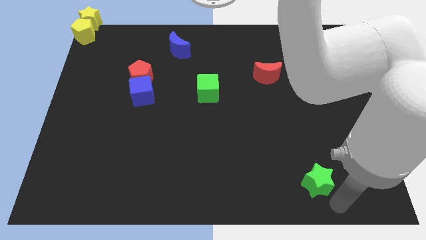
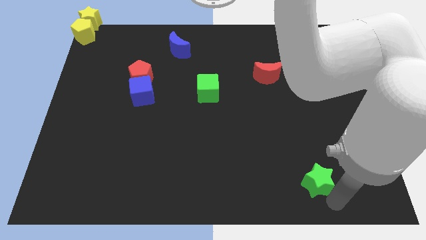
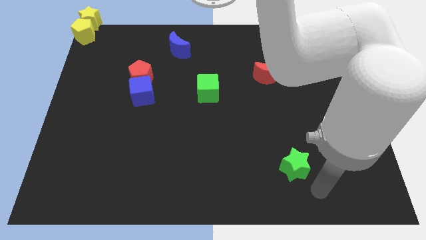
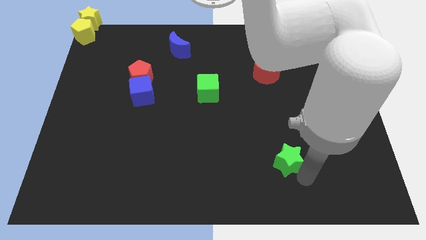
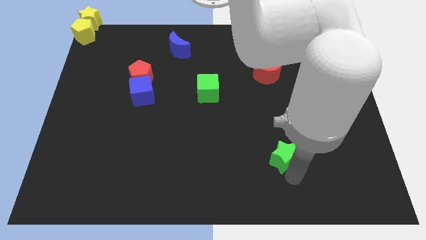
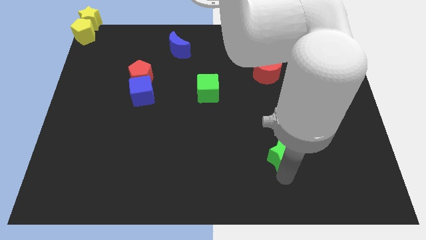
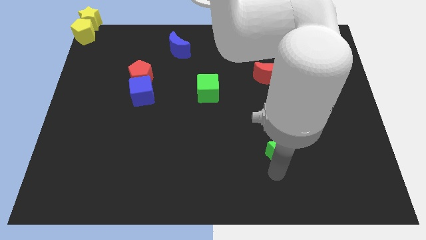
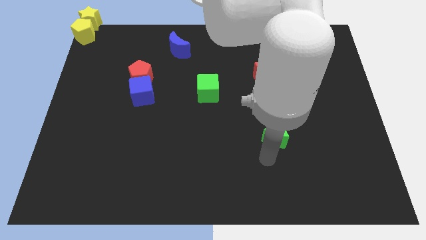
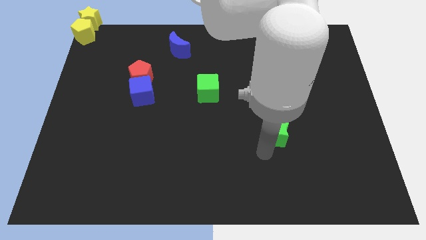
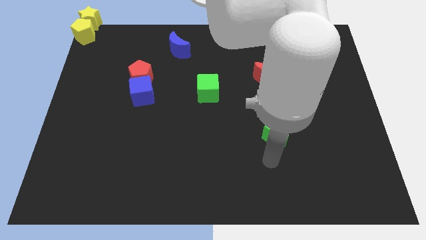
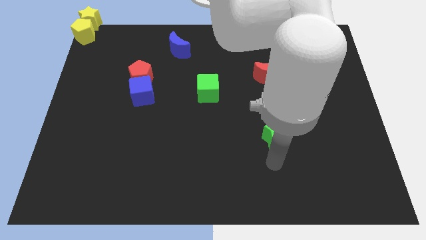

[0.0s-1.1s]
move the green star to the parallel to the bottom of the red crescent

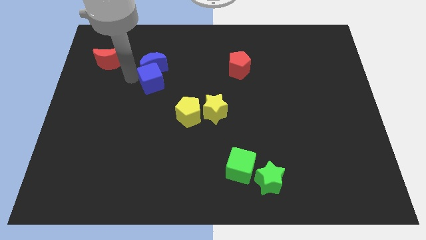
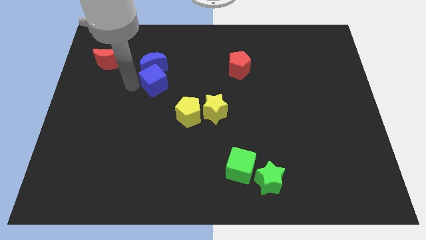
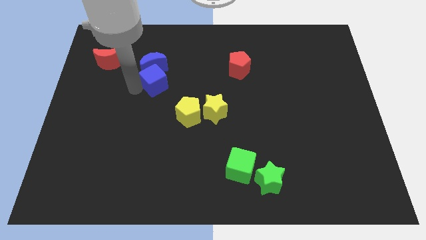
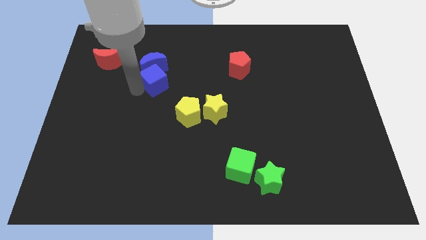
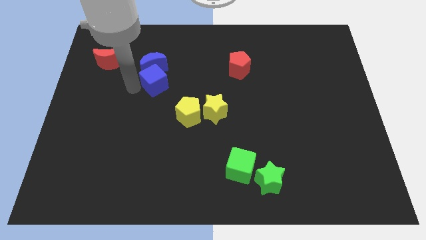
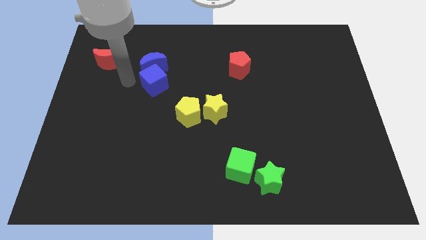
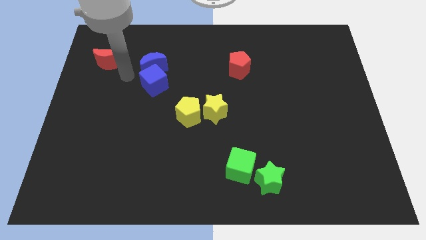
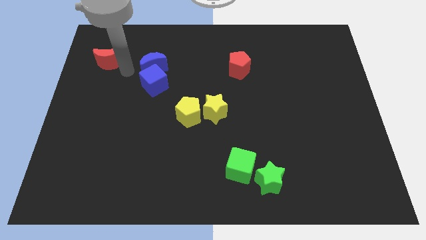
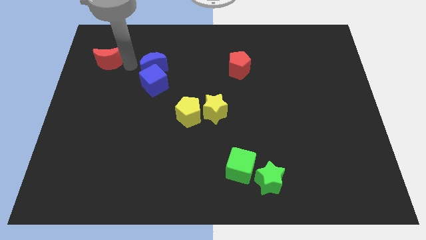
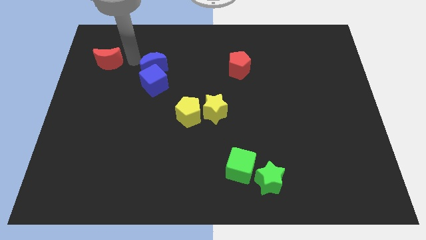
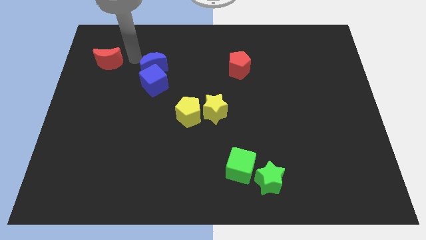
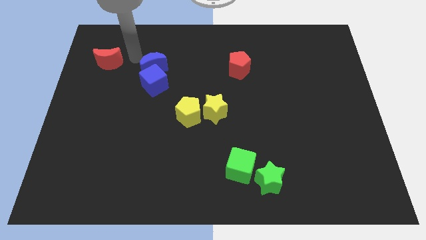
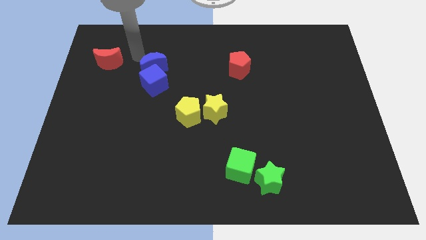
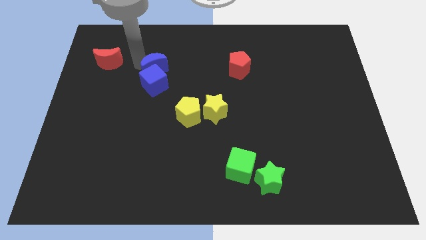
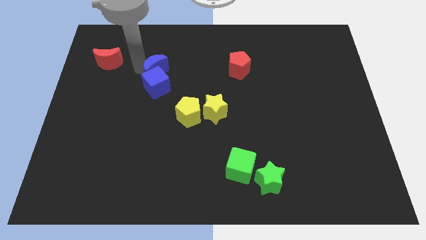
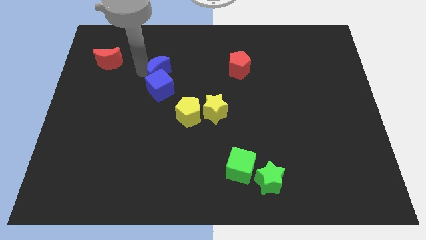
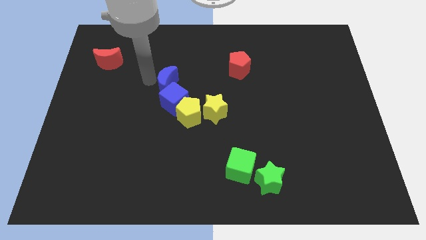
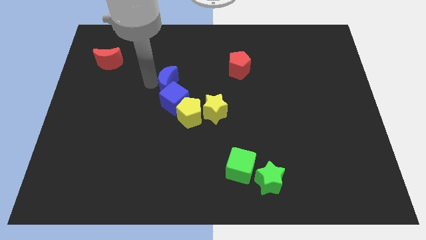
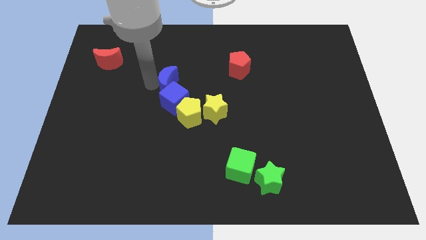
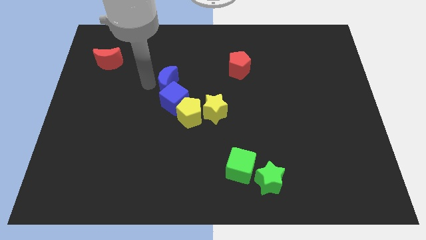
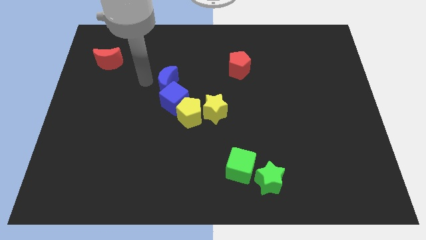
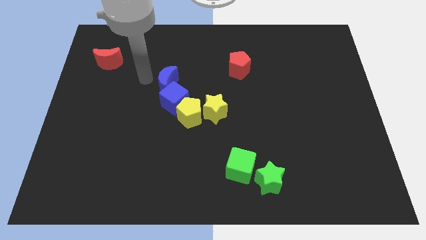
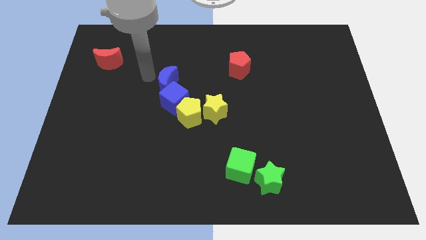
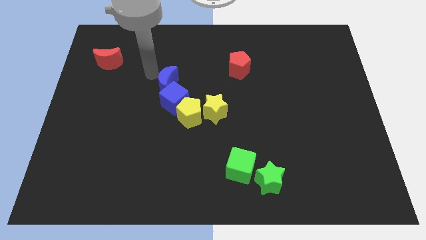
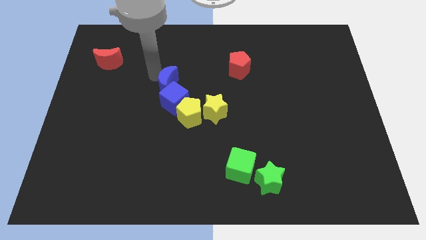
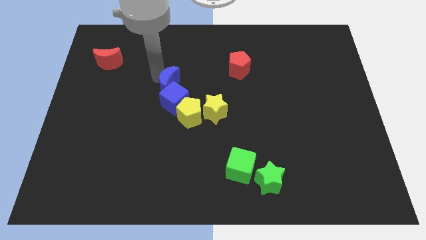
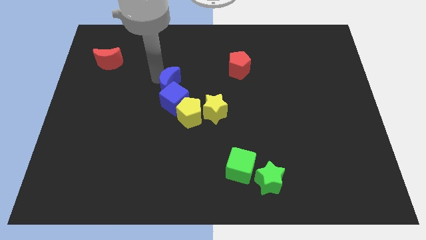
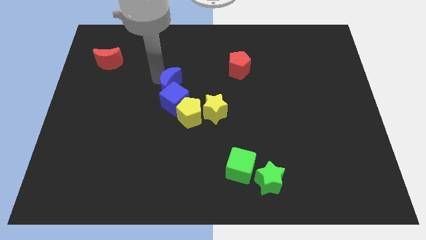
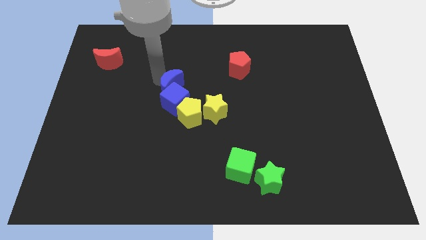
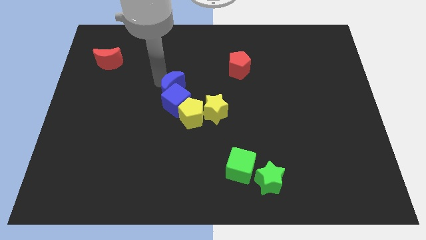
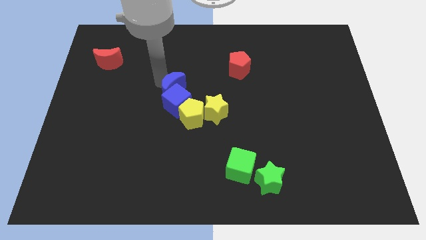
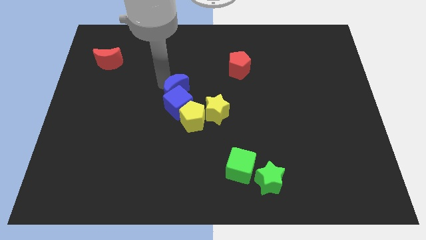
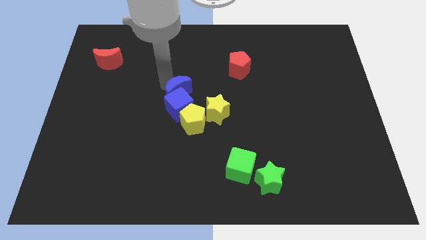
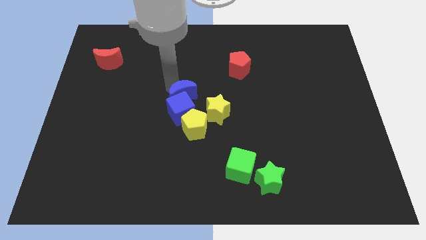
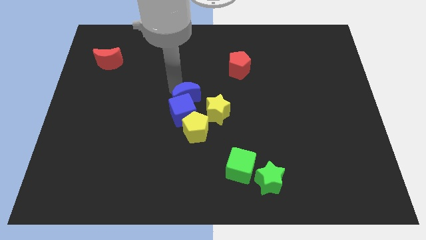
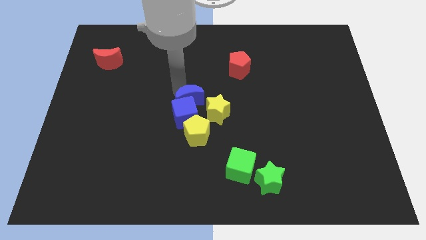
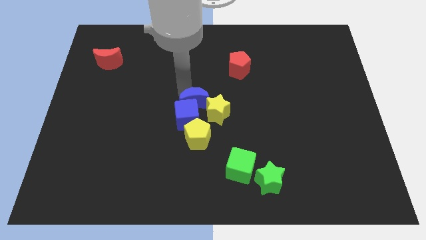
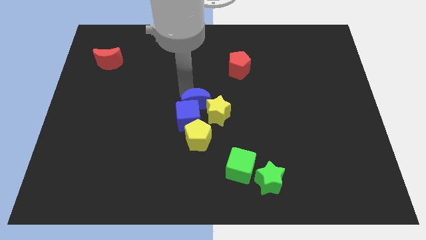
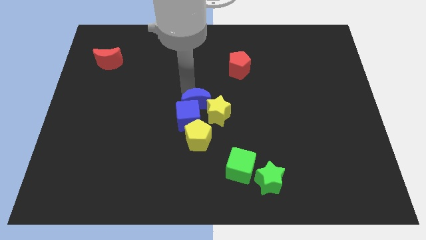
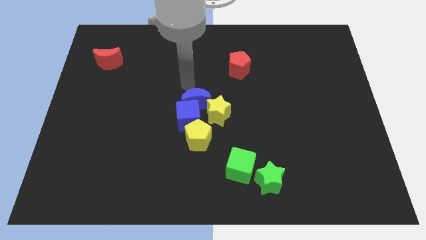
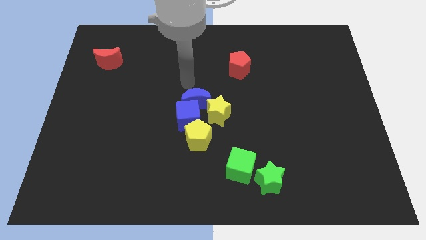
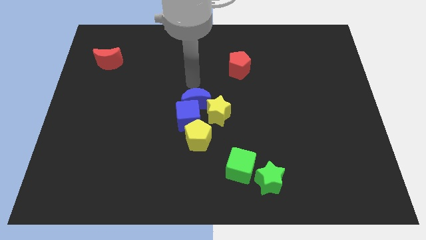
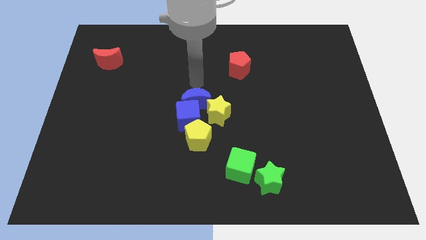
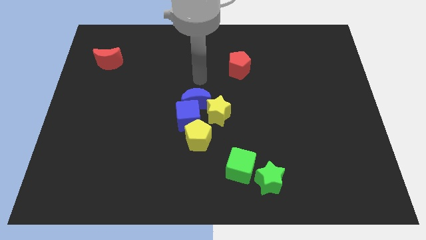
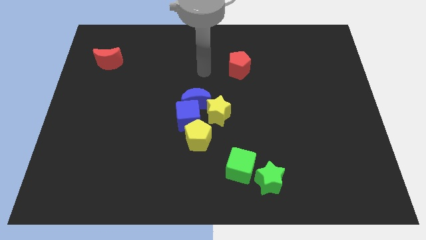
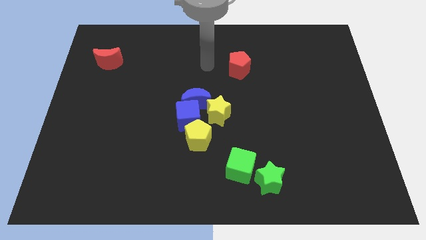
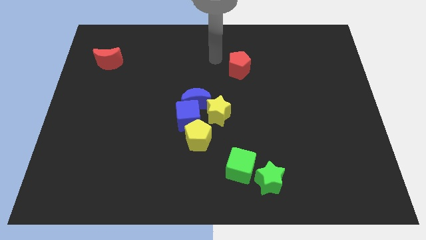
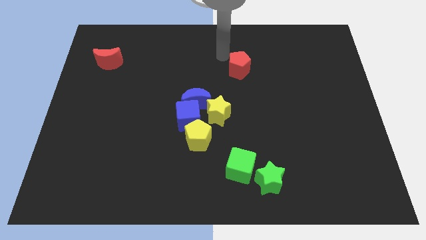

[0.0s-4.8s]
push the blue blocks into the yellow blocks

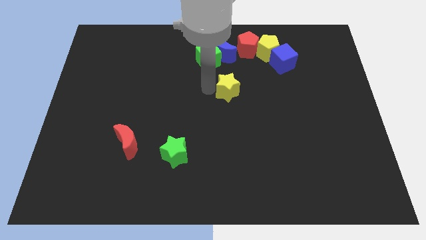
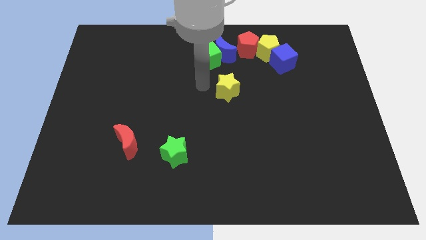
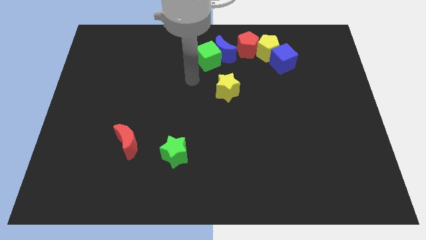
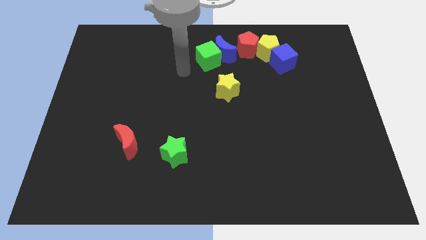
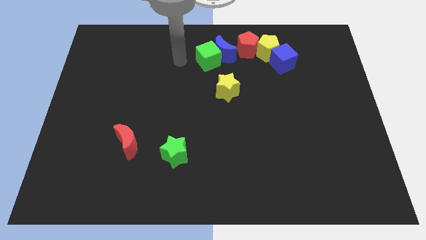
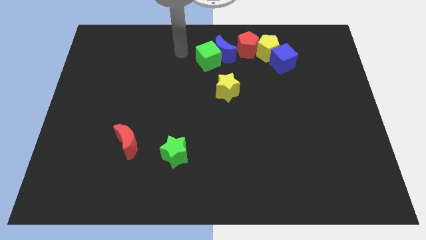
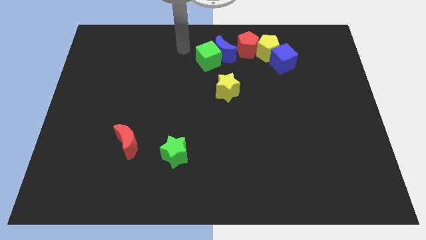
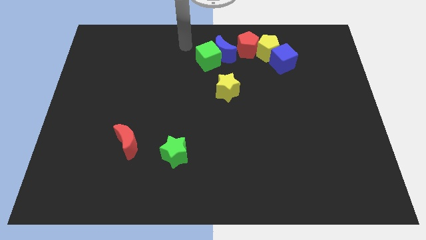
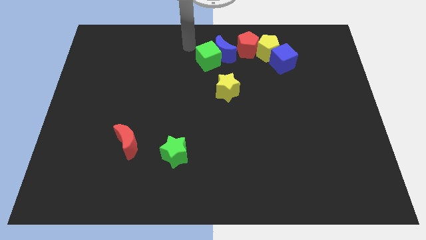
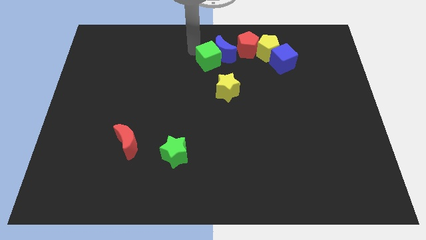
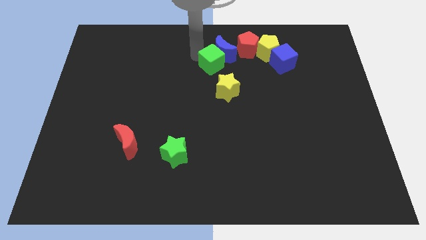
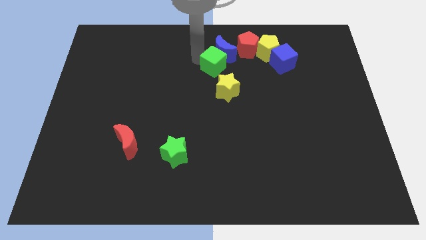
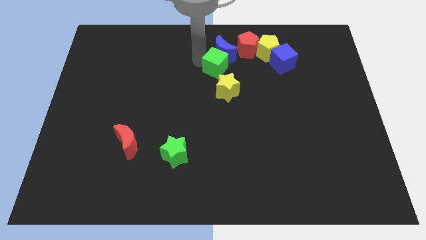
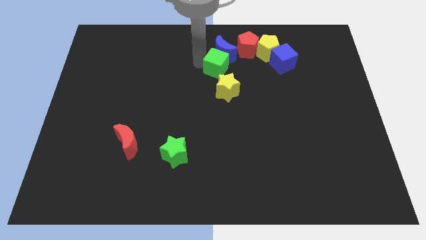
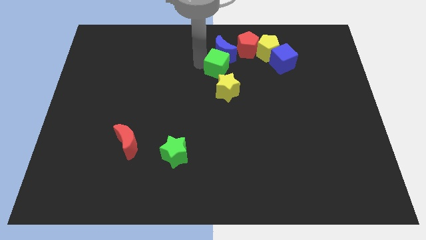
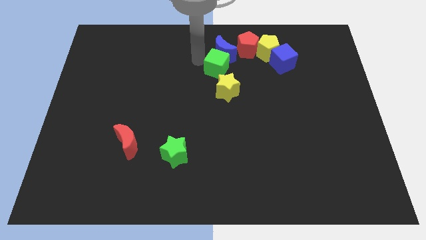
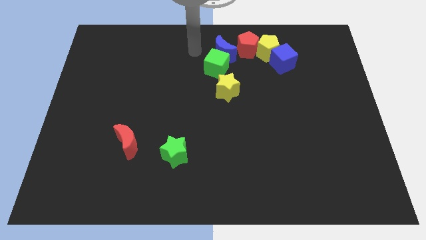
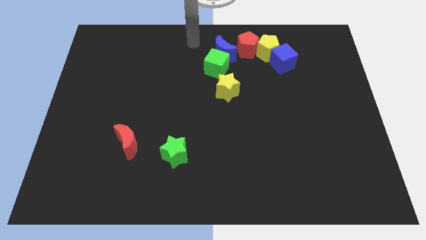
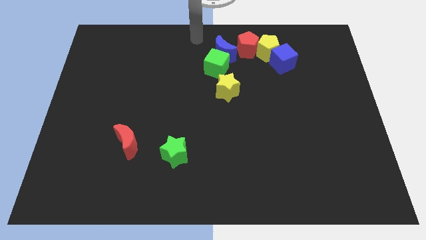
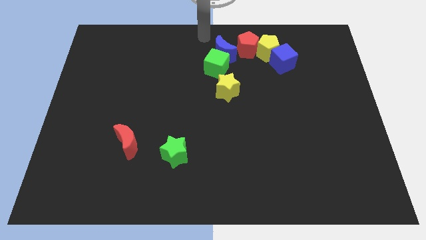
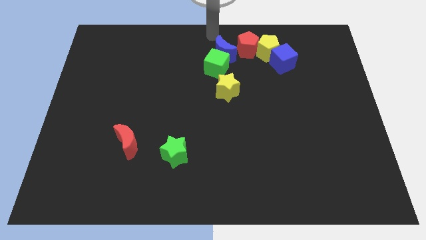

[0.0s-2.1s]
move the green cube slightly to the bottom

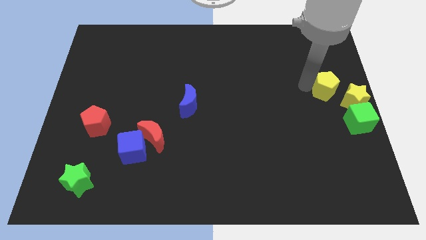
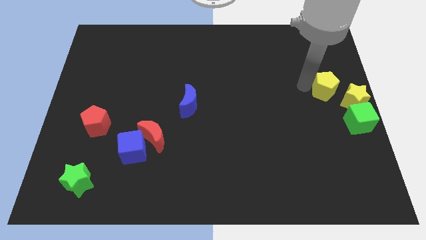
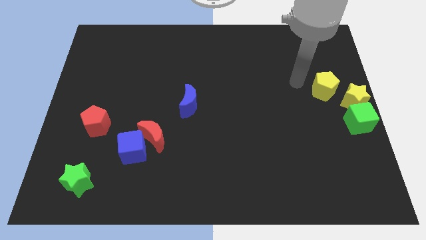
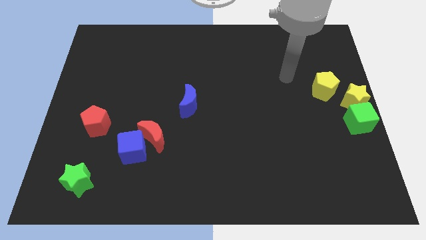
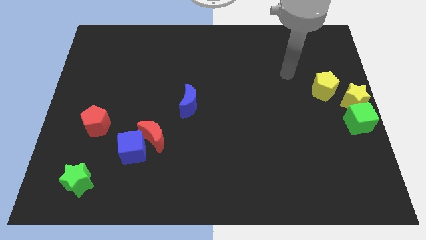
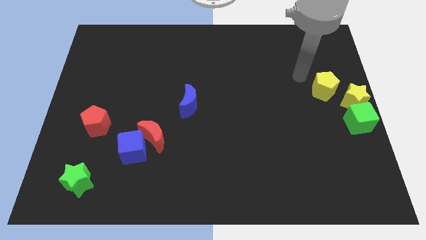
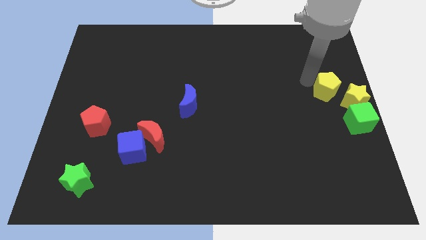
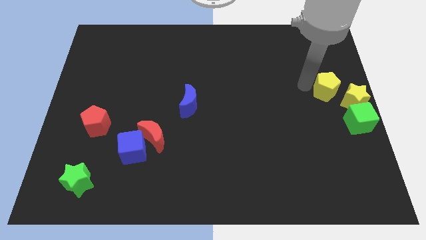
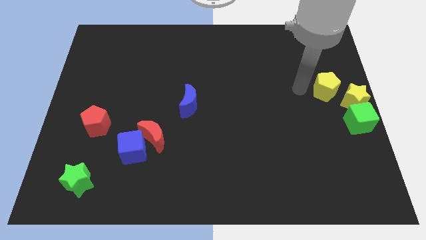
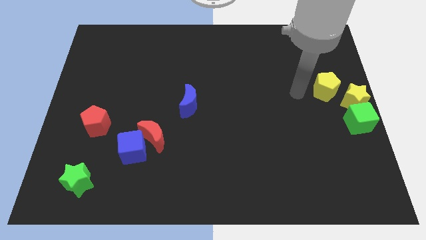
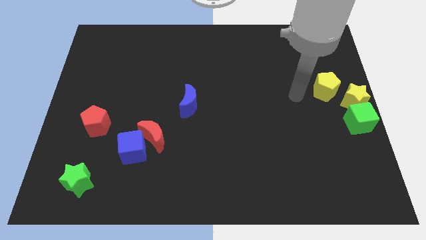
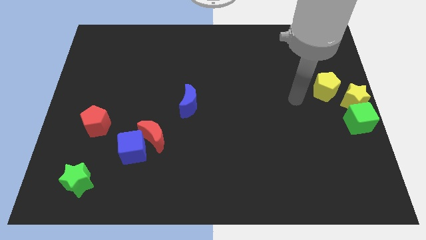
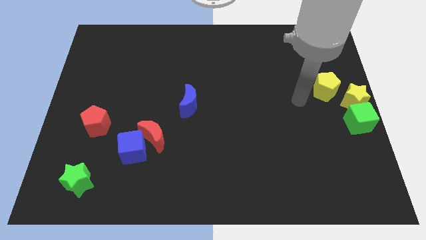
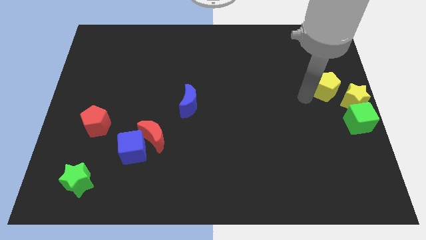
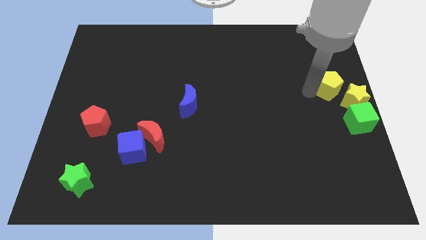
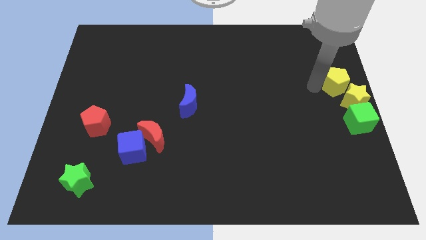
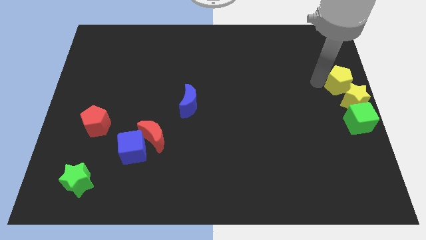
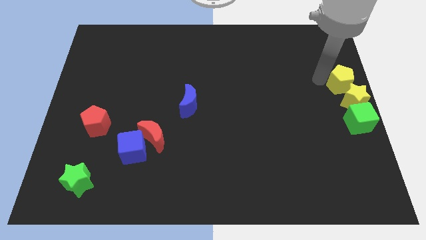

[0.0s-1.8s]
place the yellow pentagon above the yellow star
